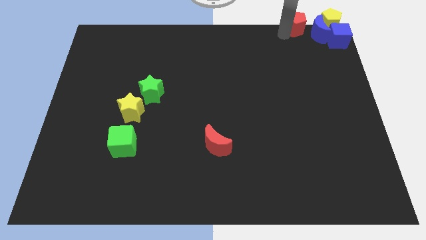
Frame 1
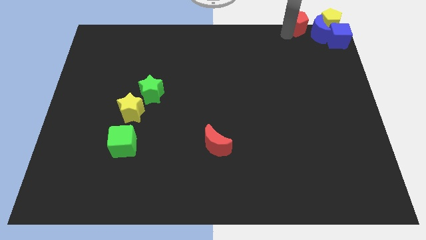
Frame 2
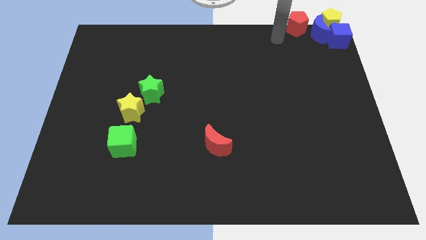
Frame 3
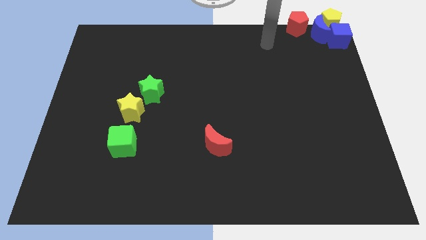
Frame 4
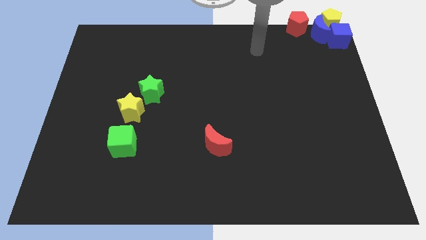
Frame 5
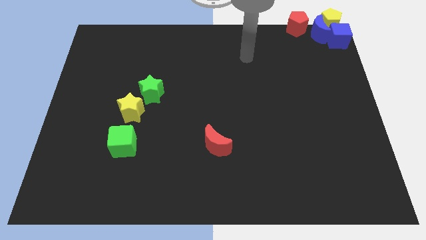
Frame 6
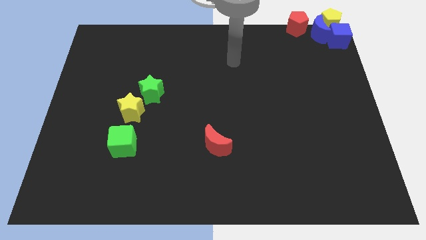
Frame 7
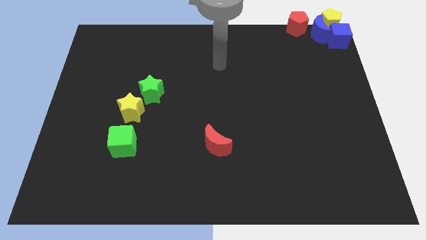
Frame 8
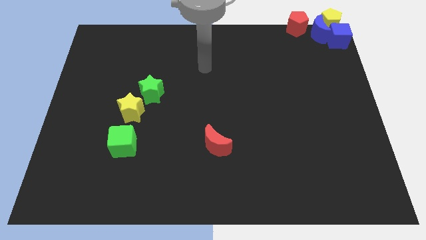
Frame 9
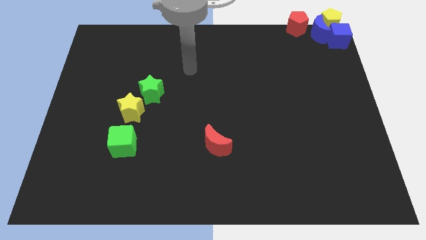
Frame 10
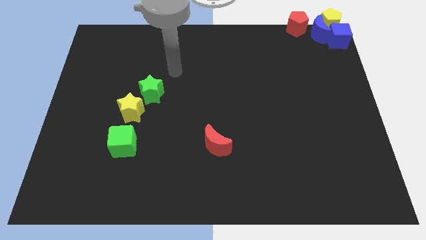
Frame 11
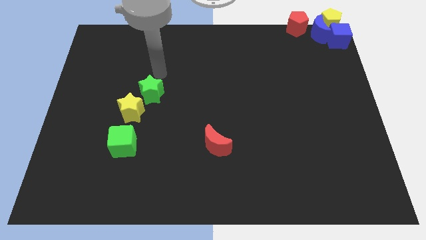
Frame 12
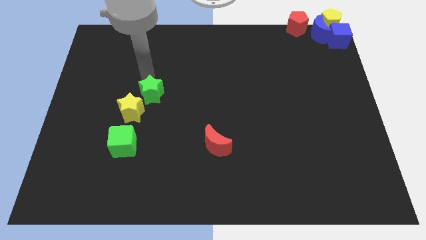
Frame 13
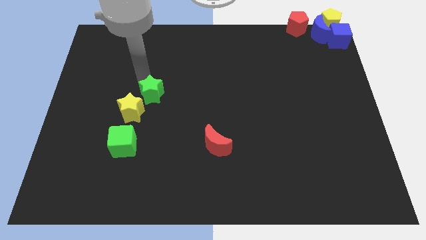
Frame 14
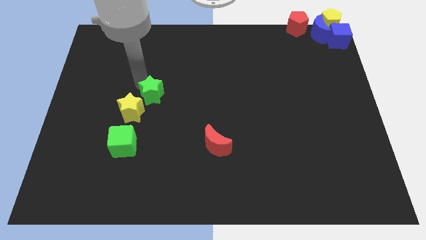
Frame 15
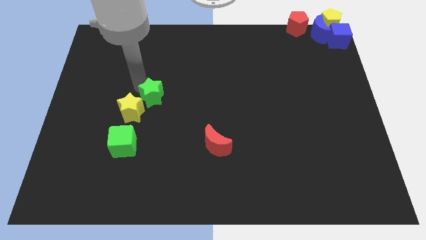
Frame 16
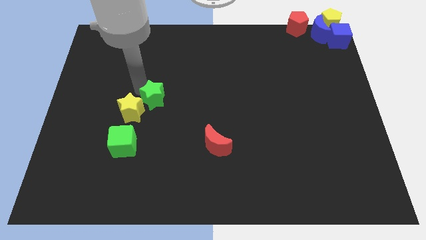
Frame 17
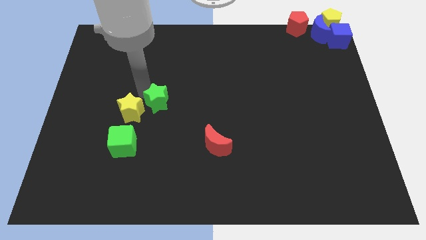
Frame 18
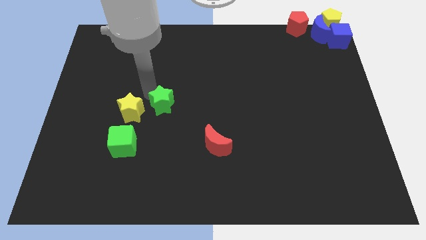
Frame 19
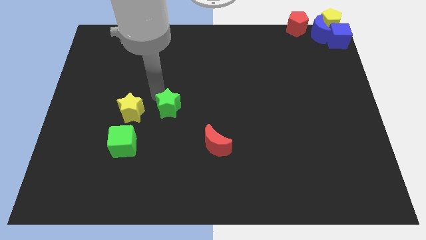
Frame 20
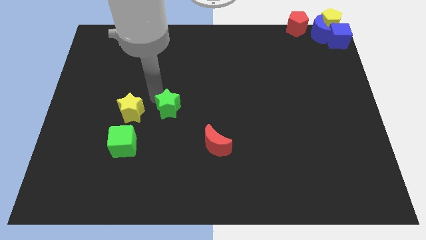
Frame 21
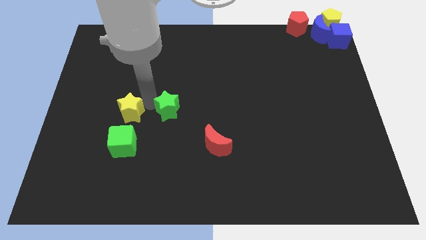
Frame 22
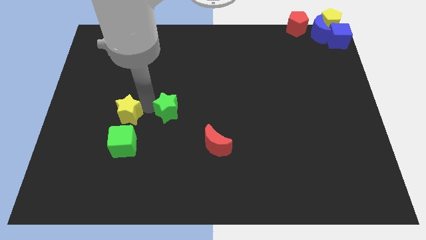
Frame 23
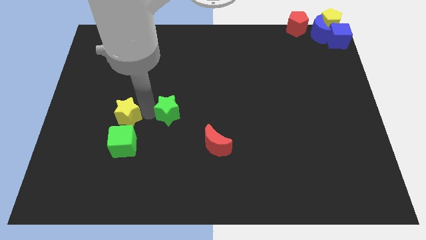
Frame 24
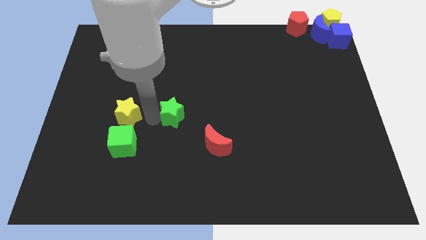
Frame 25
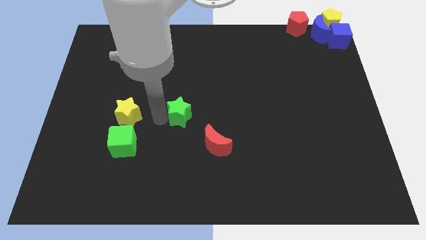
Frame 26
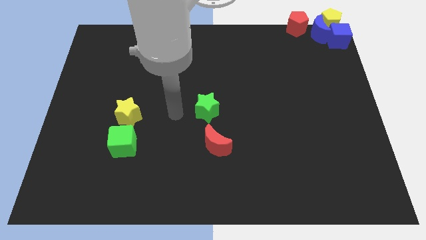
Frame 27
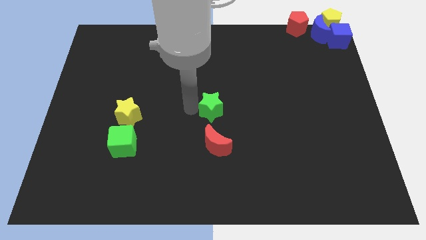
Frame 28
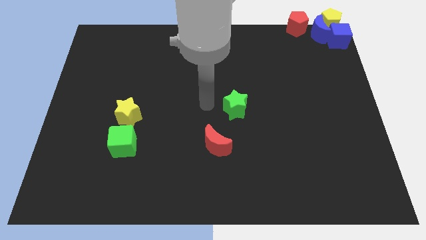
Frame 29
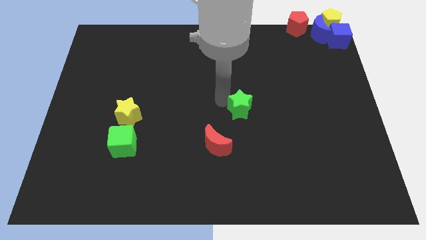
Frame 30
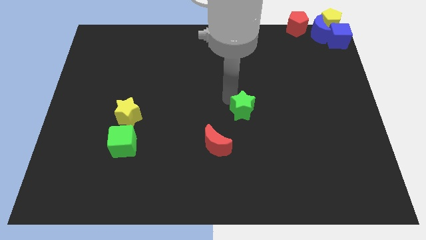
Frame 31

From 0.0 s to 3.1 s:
separate the green star from yellow star

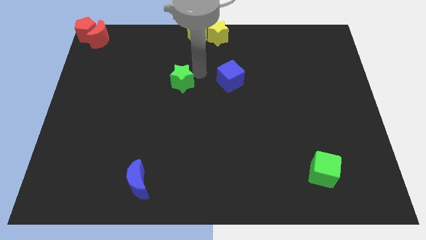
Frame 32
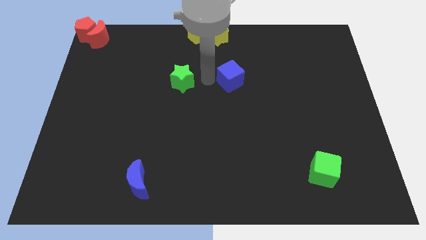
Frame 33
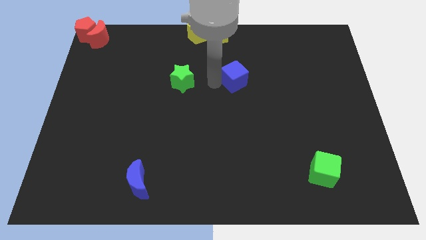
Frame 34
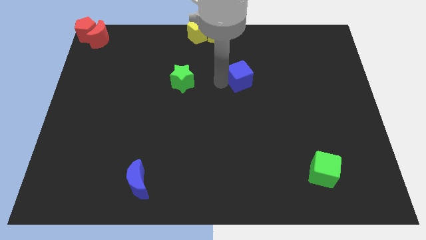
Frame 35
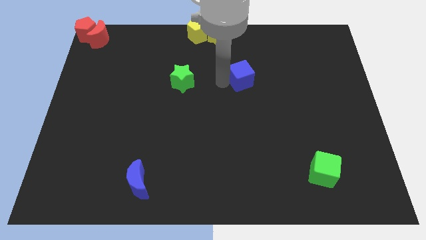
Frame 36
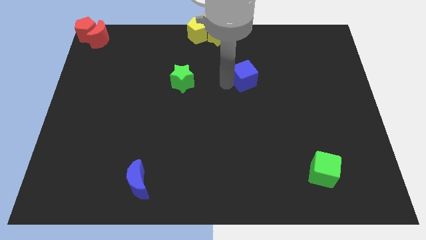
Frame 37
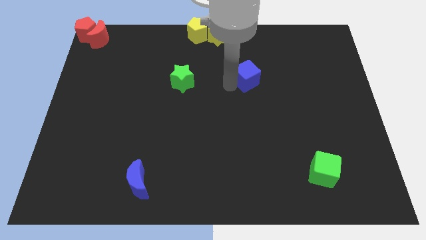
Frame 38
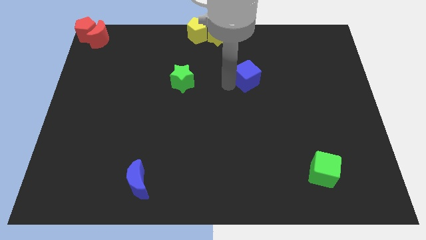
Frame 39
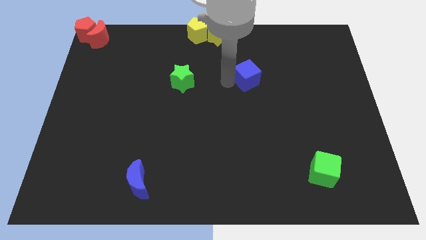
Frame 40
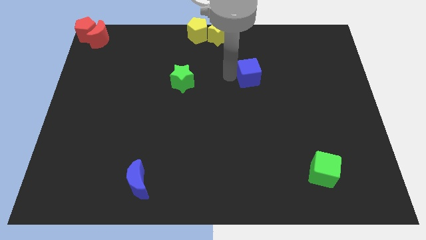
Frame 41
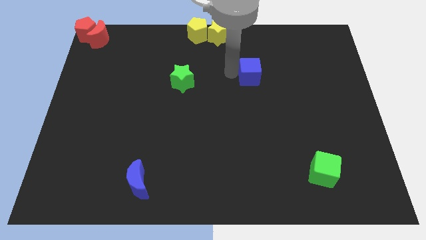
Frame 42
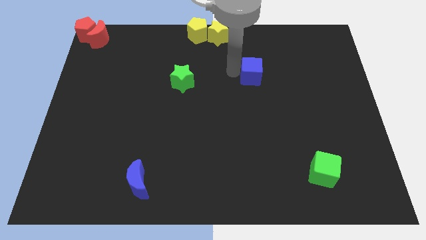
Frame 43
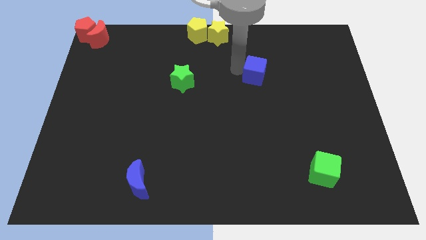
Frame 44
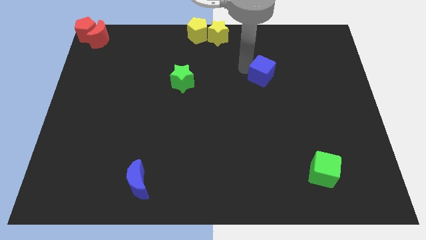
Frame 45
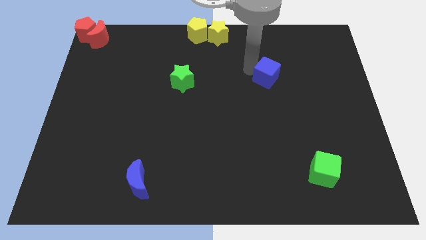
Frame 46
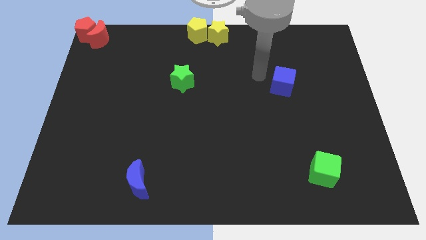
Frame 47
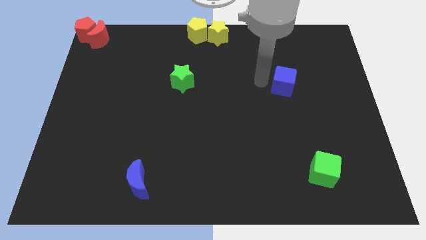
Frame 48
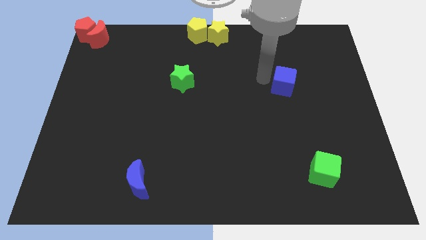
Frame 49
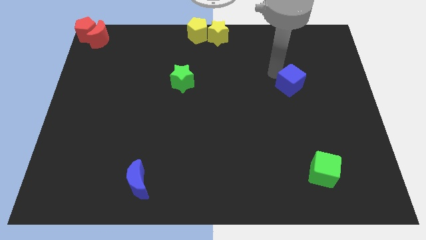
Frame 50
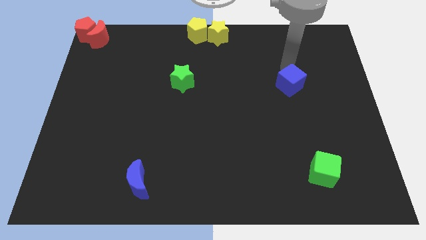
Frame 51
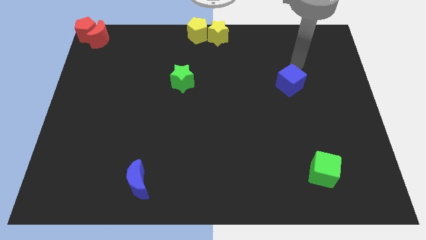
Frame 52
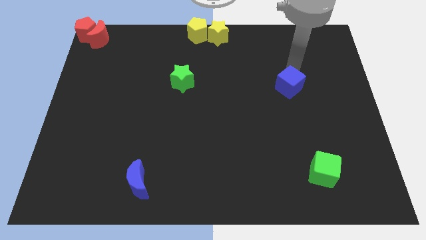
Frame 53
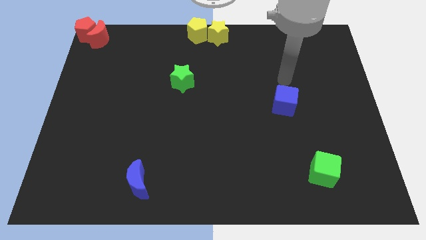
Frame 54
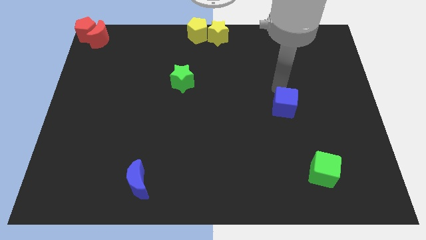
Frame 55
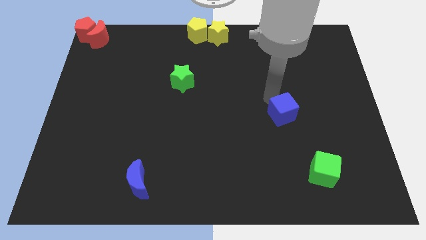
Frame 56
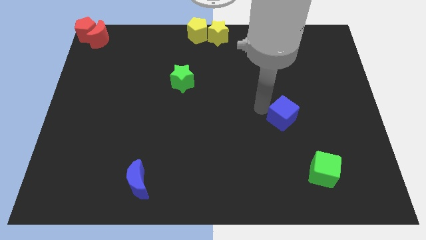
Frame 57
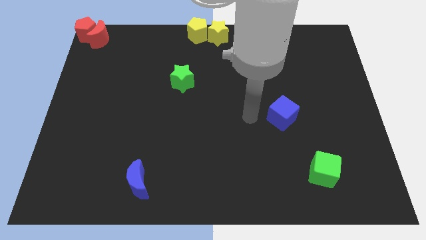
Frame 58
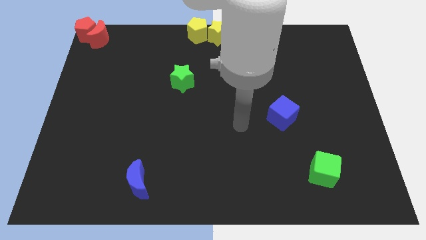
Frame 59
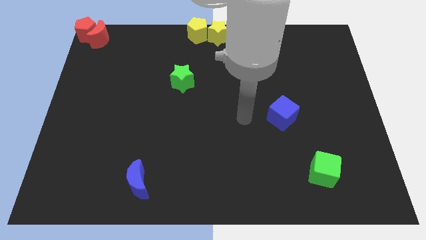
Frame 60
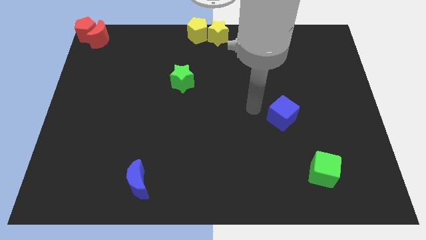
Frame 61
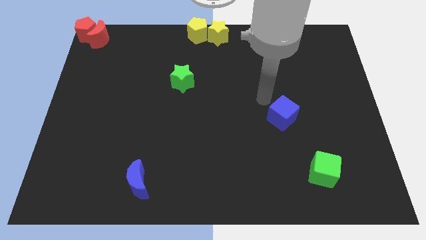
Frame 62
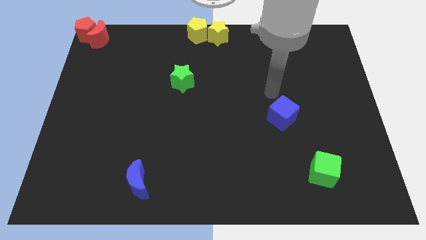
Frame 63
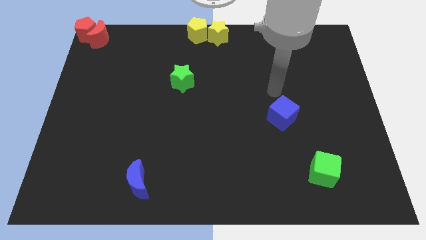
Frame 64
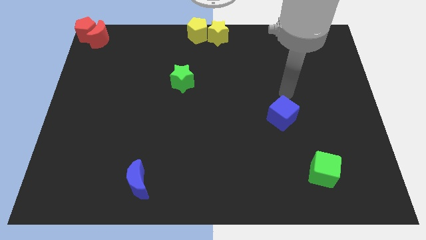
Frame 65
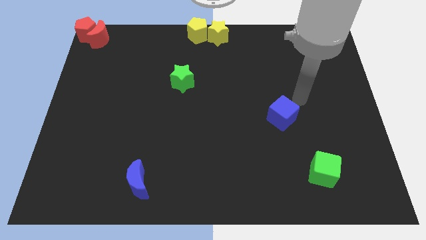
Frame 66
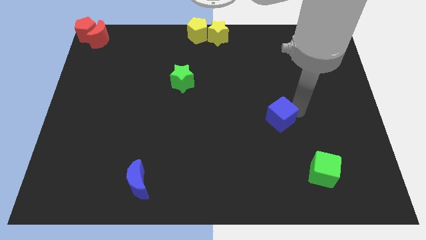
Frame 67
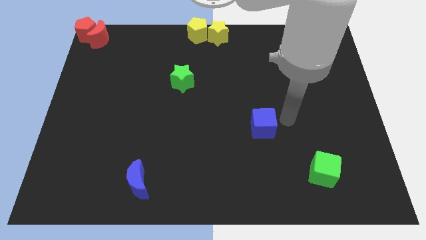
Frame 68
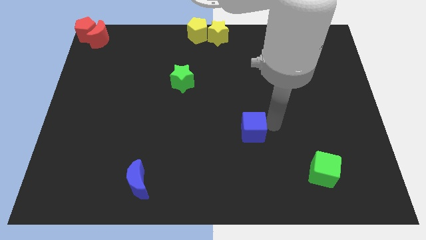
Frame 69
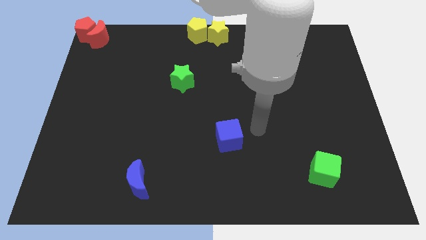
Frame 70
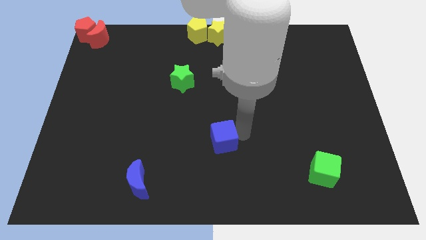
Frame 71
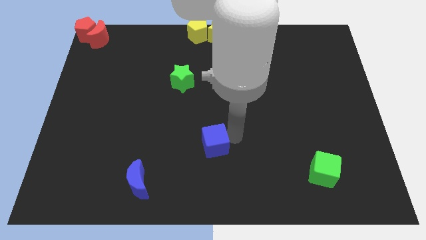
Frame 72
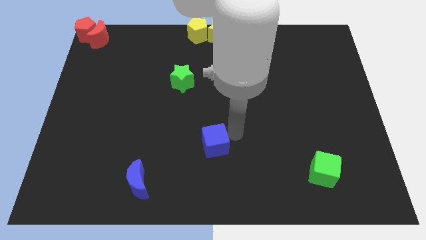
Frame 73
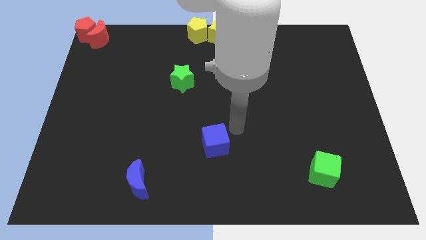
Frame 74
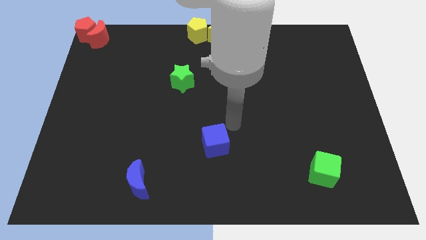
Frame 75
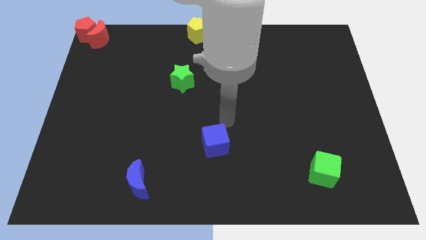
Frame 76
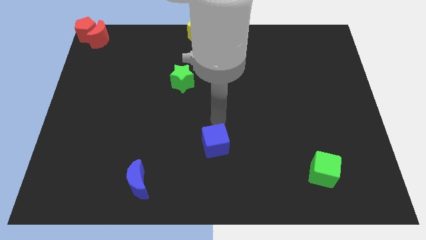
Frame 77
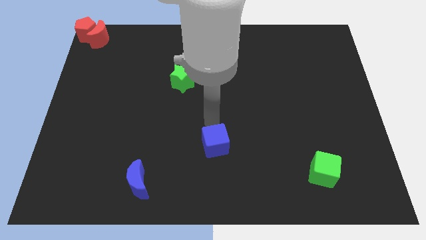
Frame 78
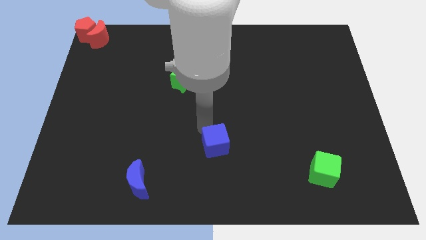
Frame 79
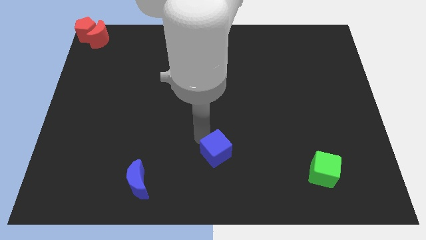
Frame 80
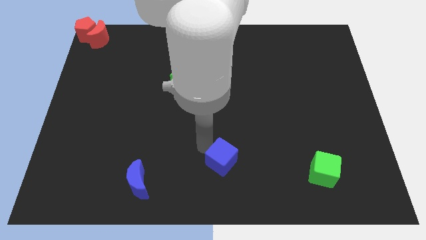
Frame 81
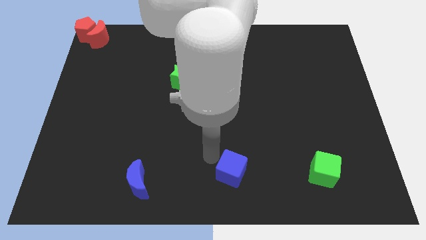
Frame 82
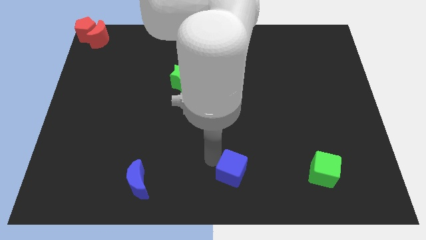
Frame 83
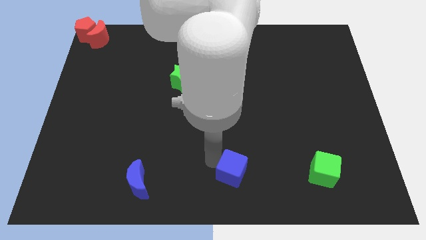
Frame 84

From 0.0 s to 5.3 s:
move the blue cube to the left of the green cube

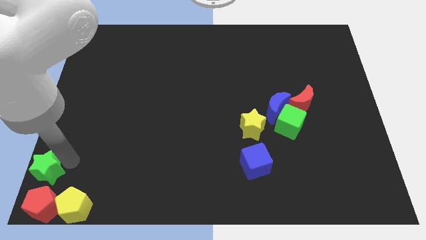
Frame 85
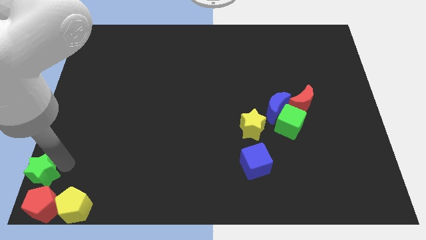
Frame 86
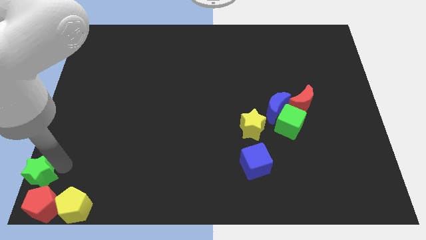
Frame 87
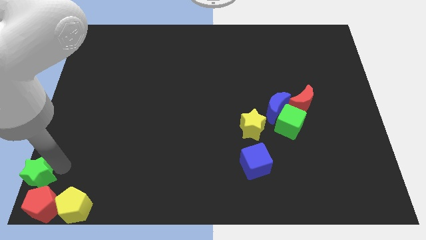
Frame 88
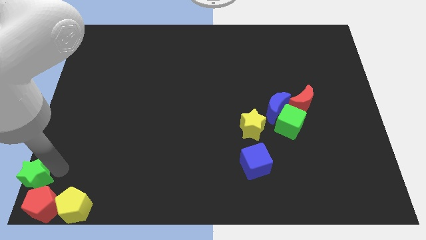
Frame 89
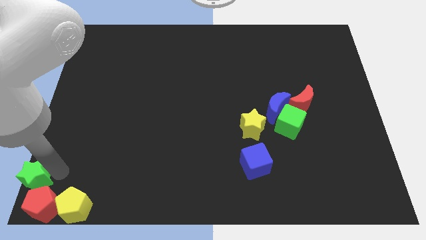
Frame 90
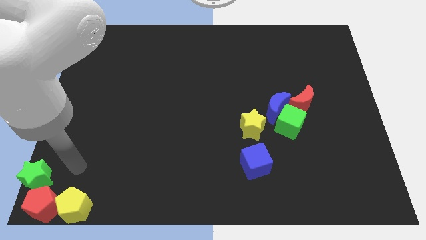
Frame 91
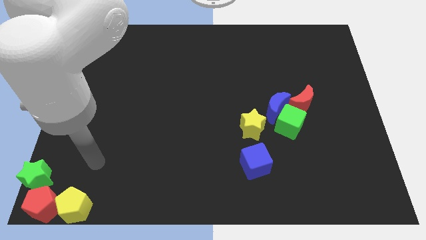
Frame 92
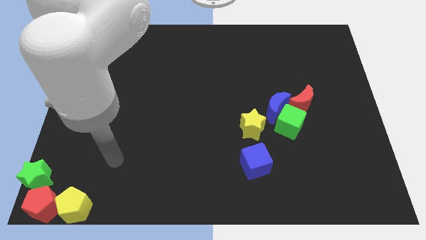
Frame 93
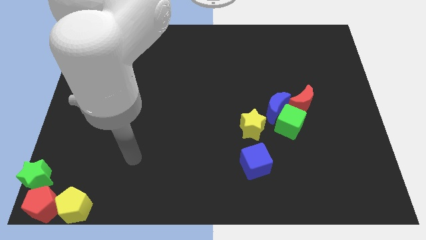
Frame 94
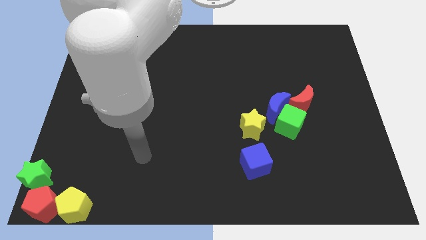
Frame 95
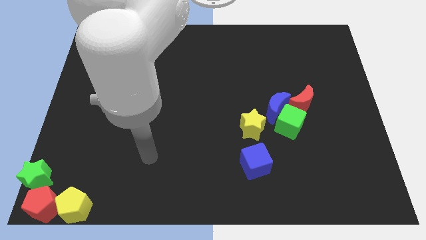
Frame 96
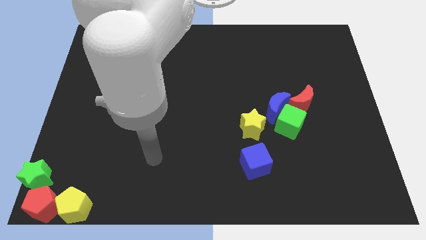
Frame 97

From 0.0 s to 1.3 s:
push green star towards the bottom left corner of the board
